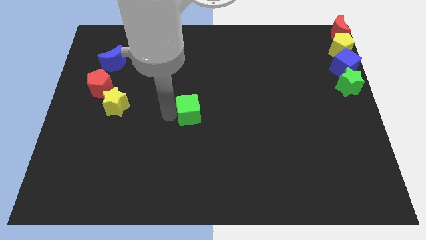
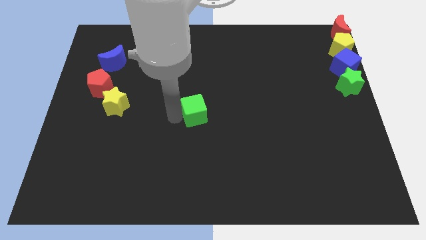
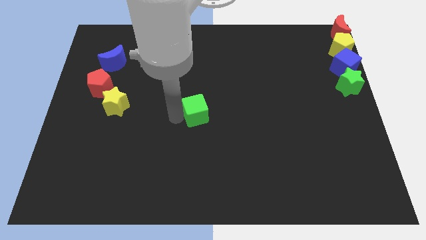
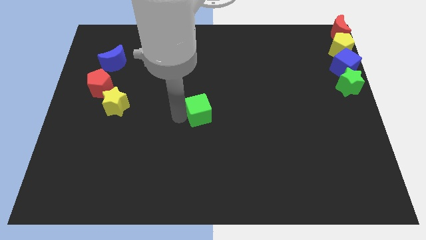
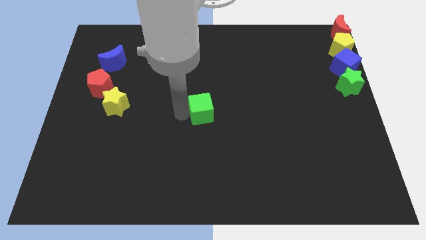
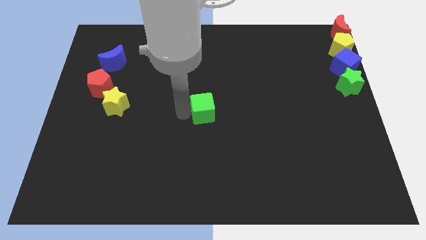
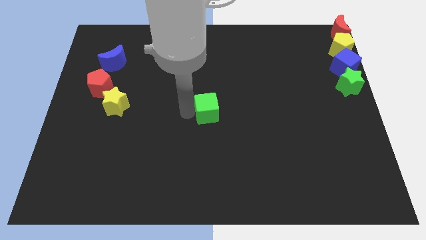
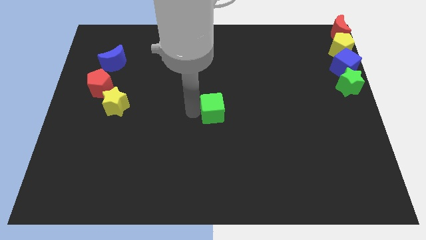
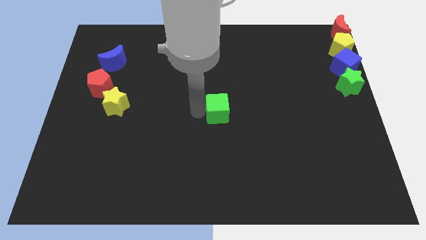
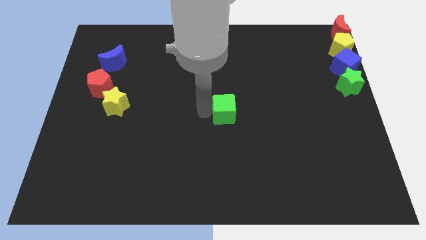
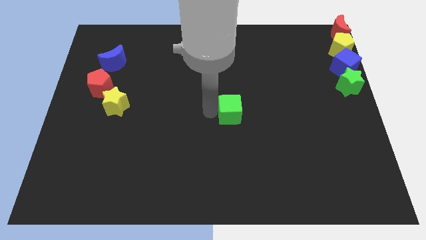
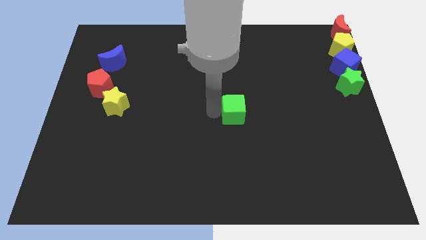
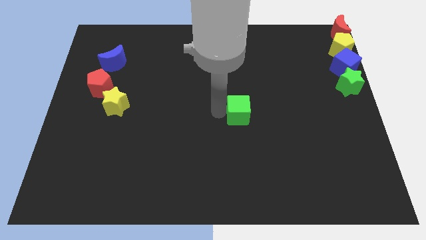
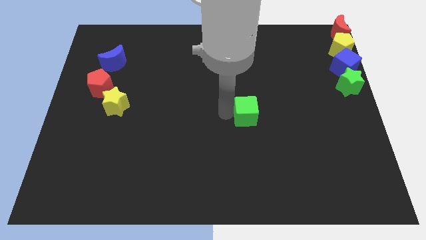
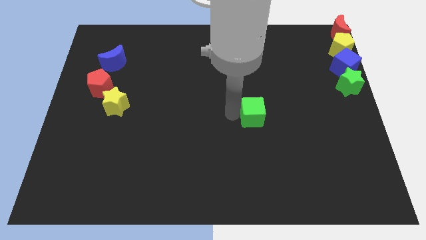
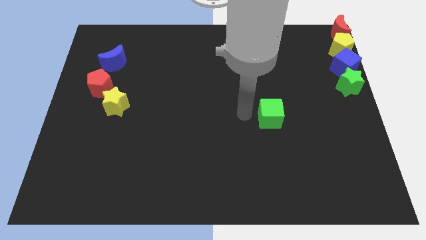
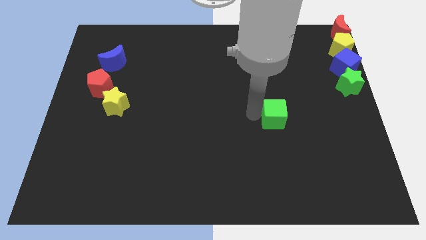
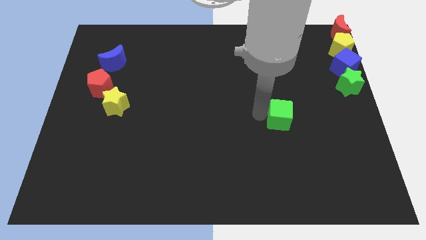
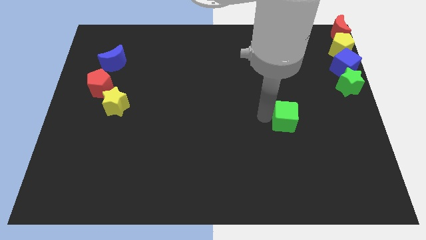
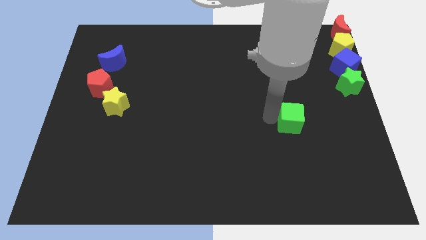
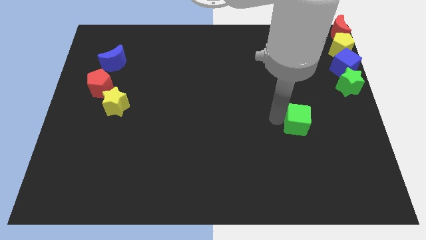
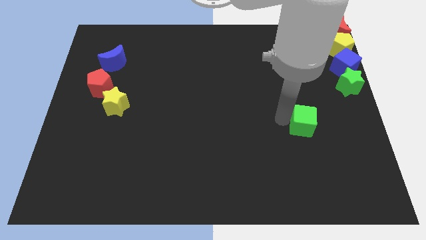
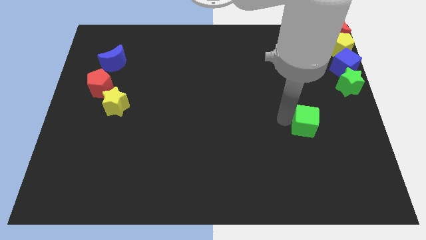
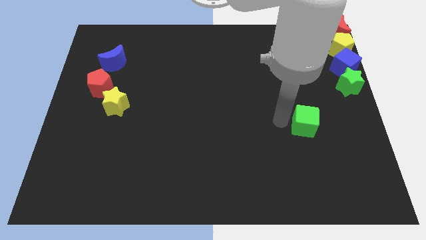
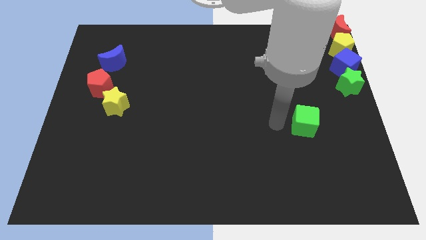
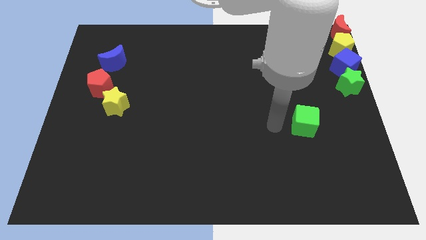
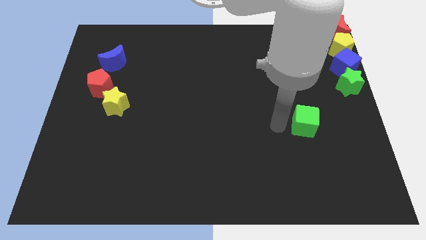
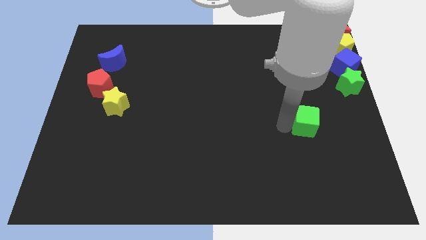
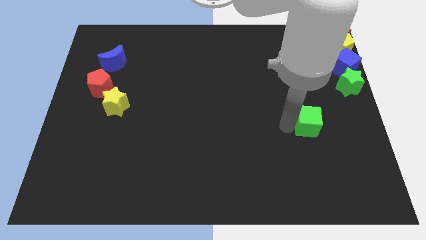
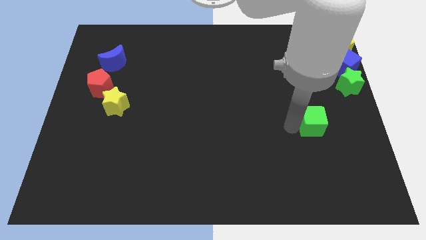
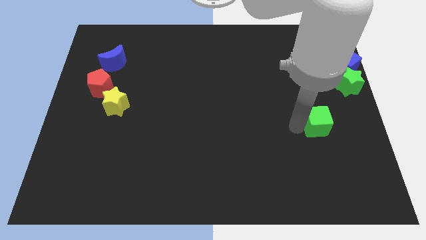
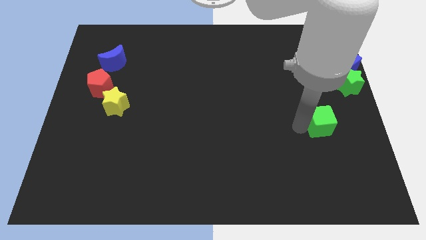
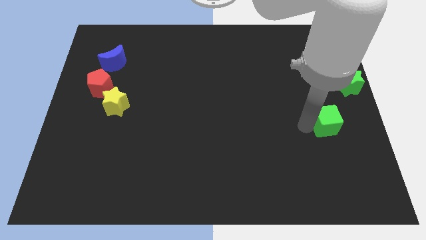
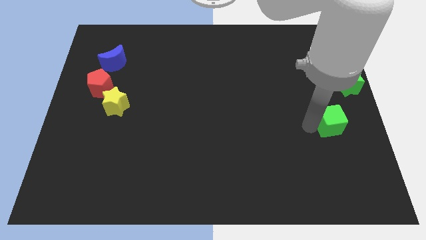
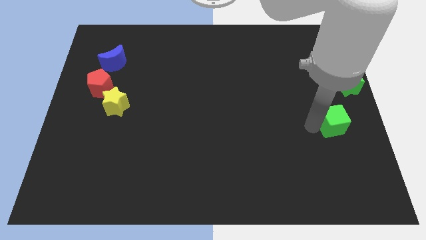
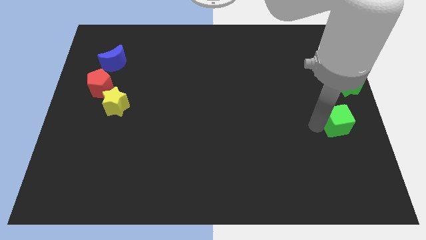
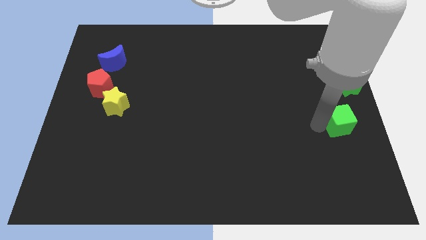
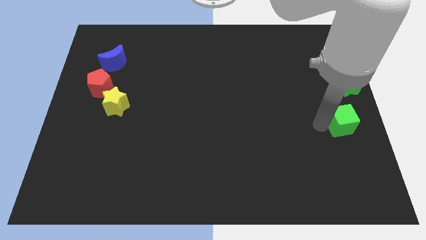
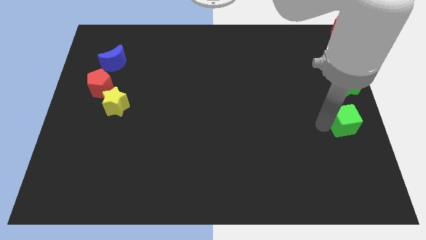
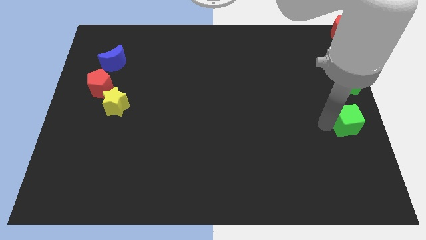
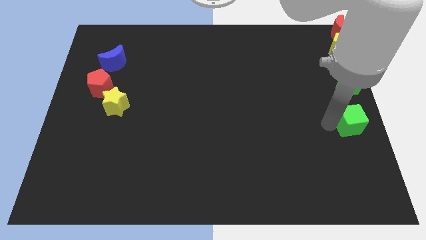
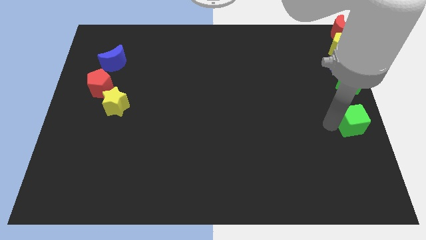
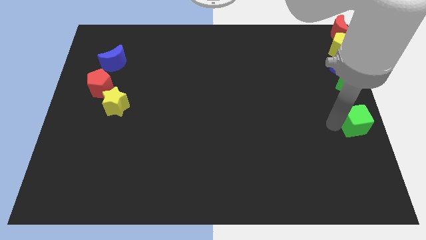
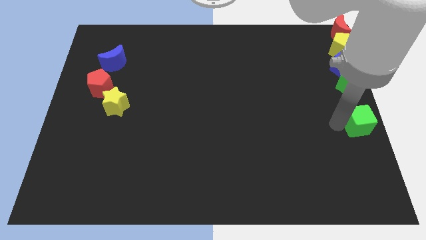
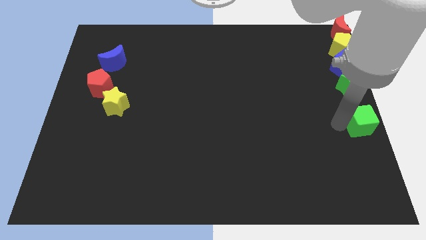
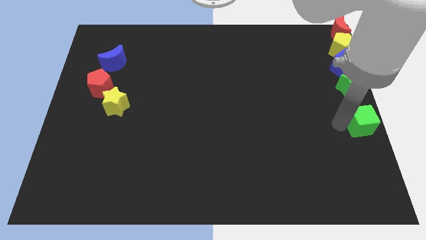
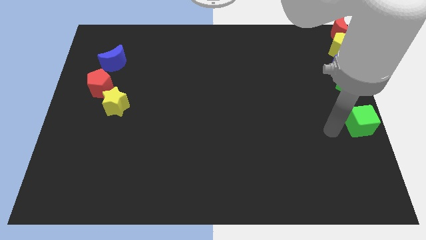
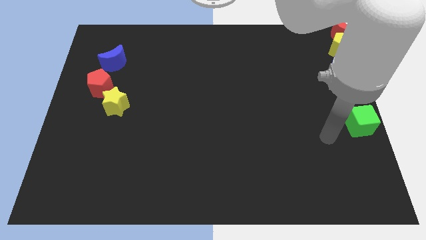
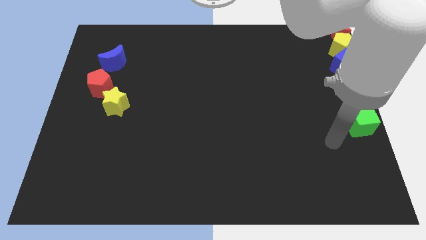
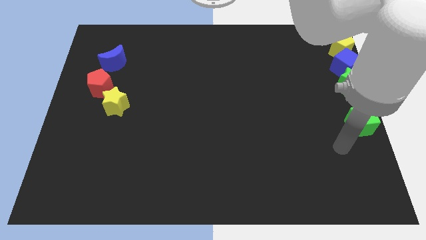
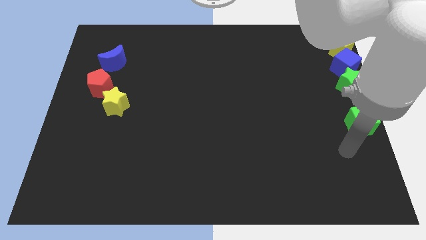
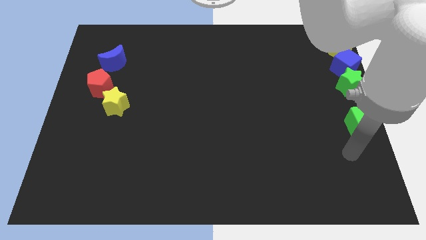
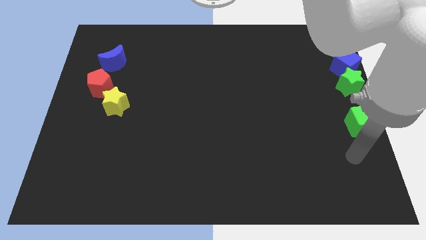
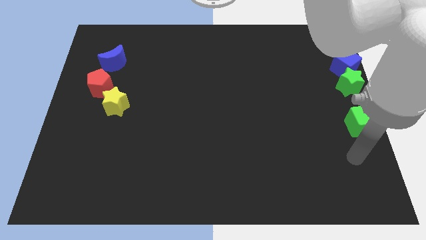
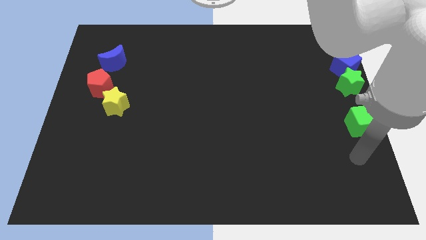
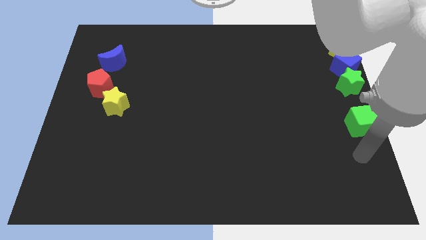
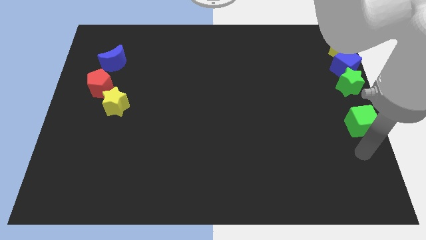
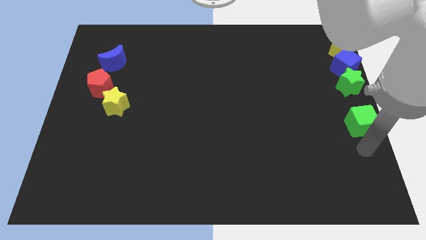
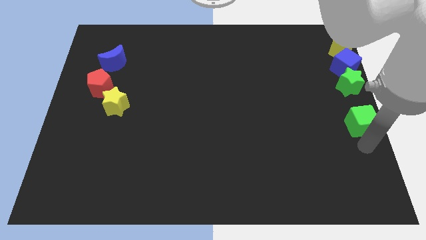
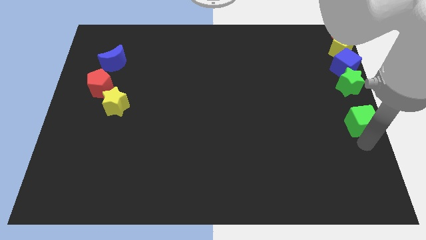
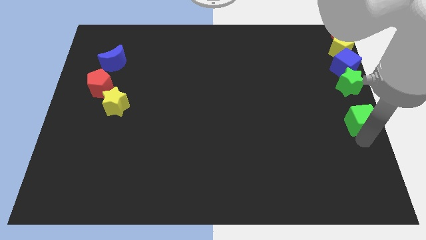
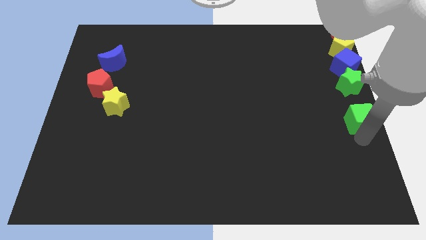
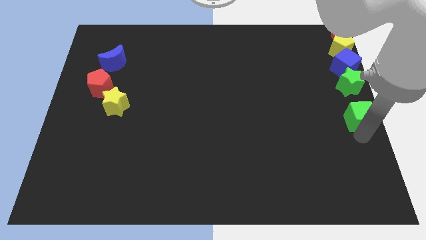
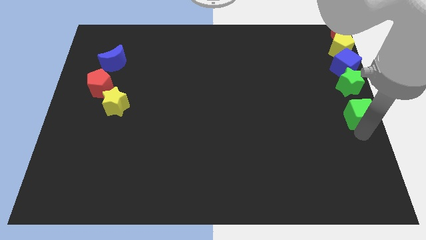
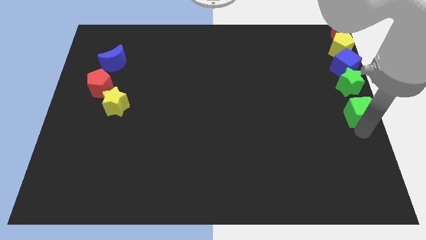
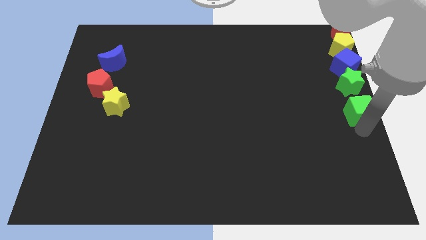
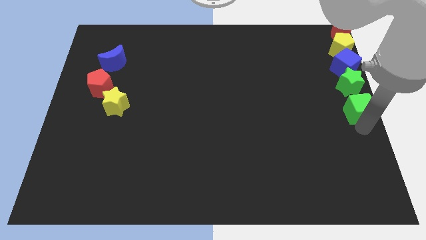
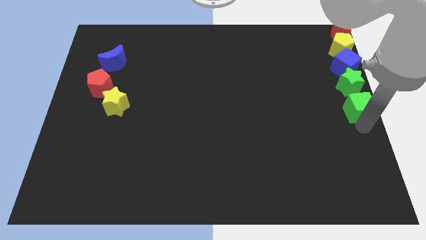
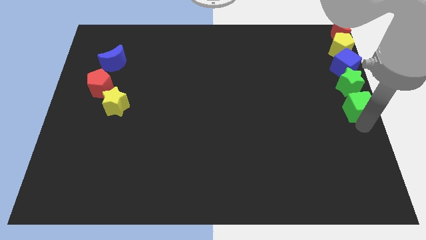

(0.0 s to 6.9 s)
put the green cube down to the green star

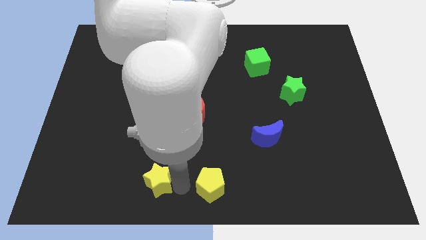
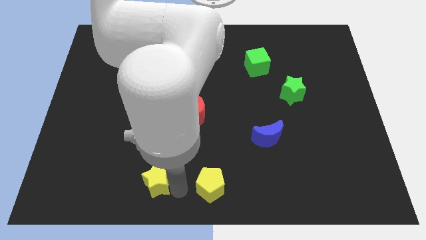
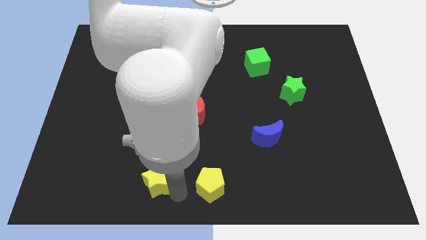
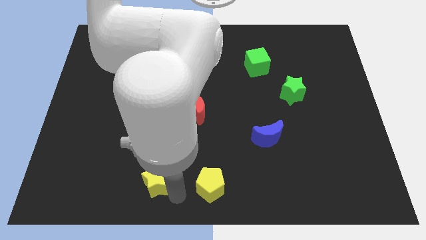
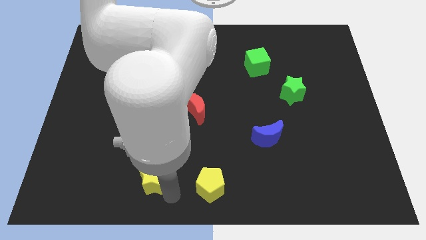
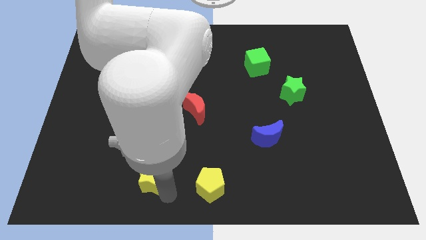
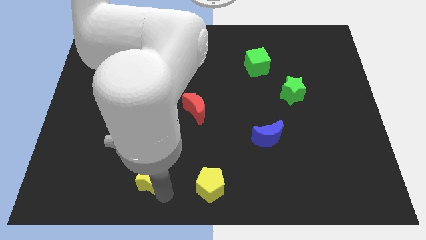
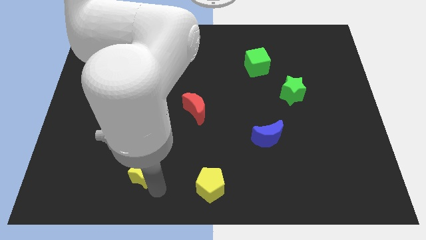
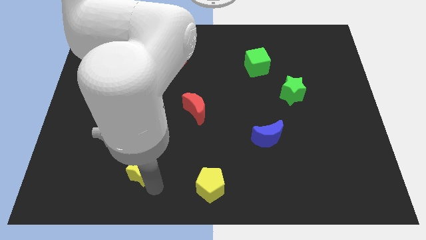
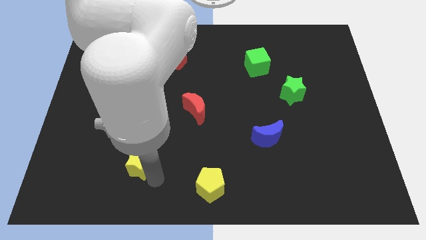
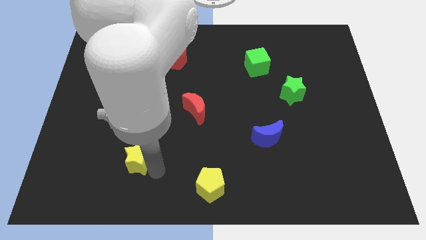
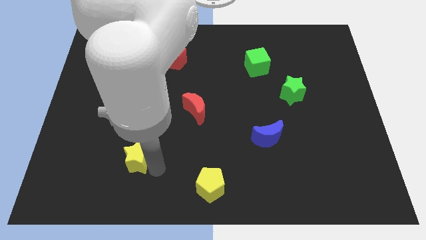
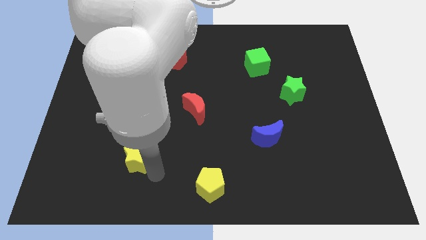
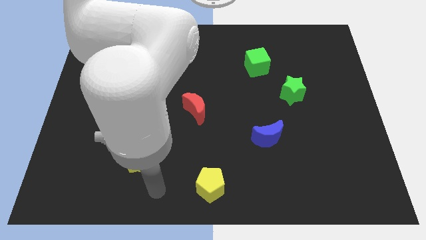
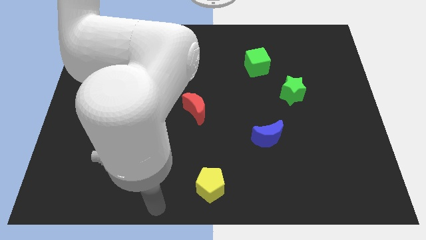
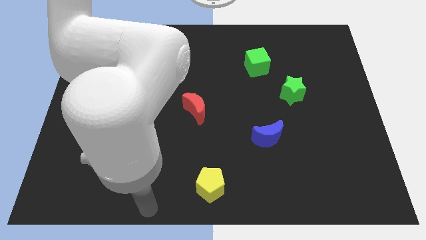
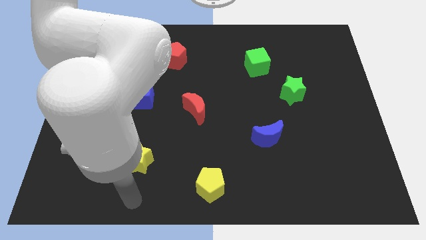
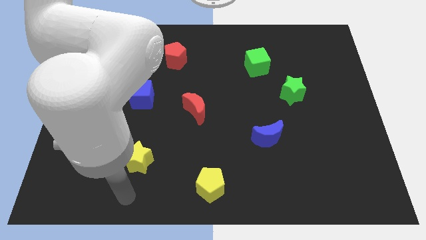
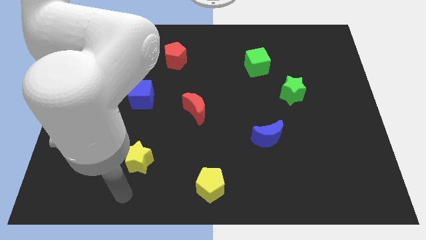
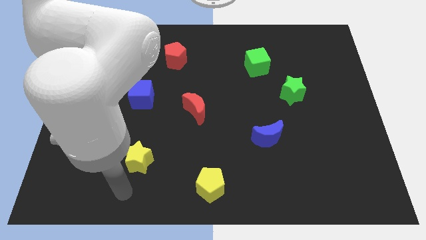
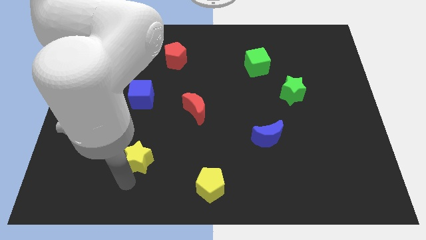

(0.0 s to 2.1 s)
place the yellow star vertically below the blue cube

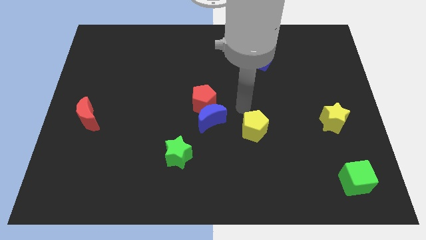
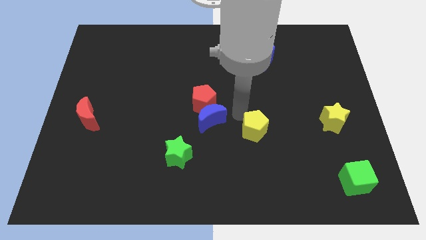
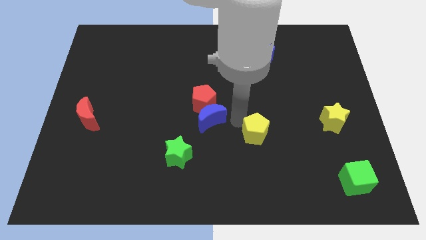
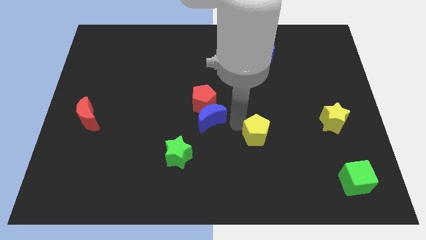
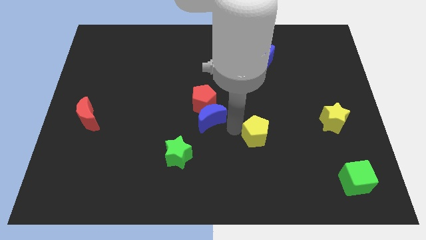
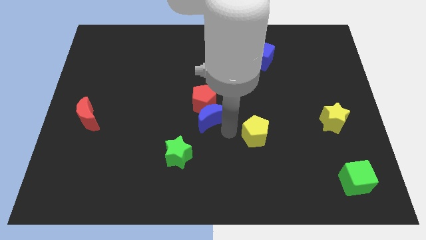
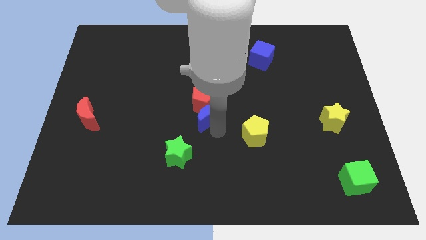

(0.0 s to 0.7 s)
push the yellow pentagon towards the left side of the yellow star
